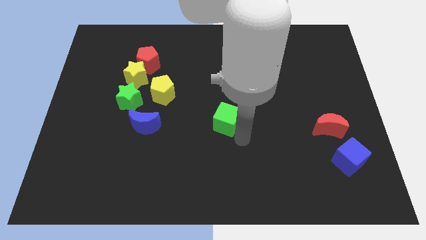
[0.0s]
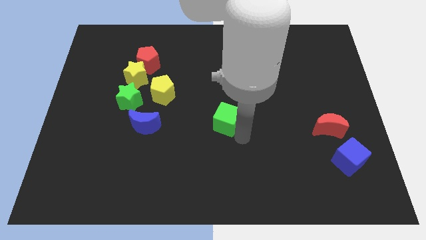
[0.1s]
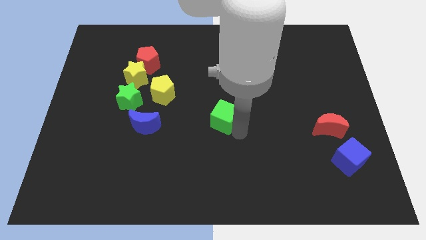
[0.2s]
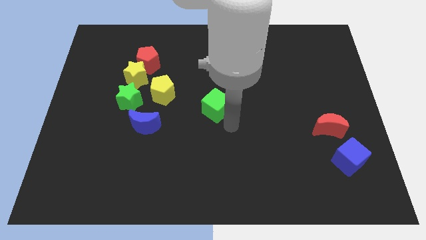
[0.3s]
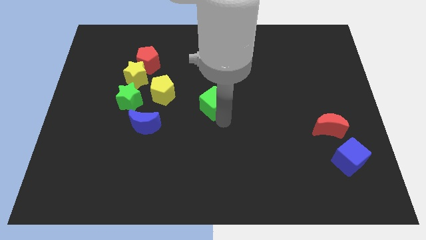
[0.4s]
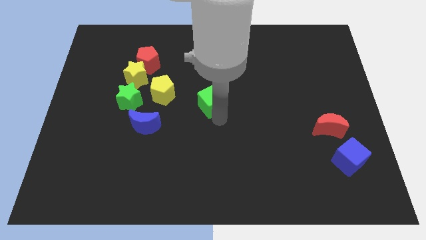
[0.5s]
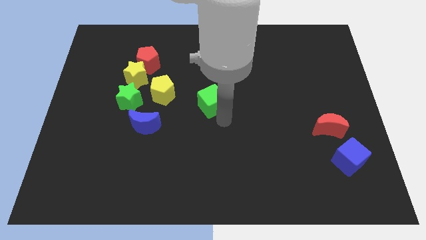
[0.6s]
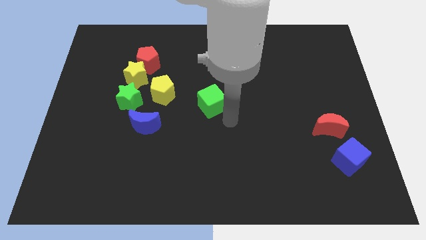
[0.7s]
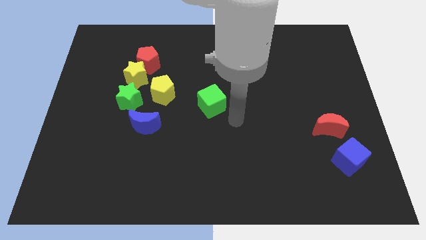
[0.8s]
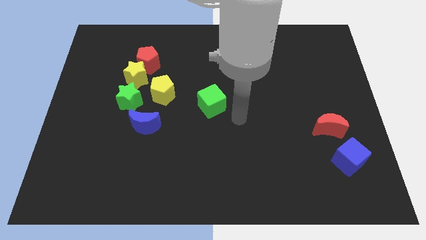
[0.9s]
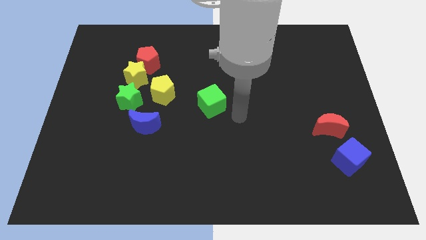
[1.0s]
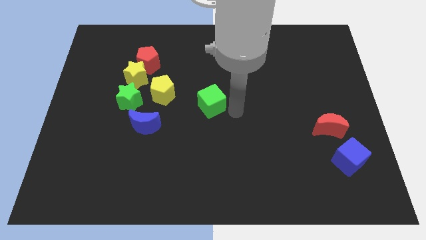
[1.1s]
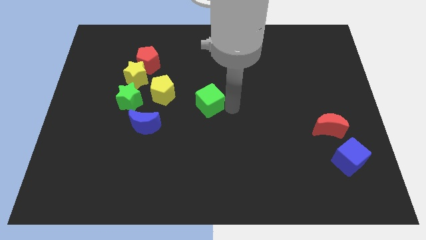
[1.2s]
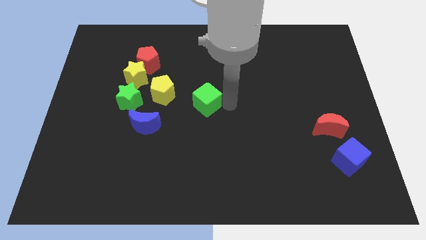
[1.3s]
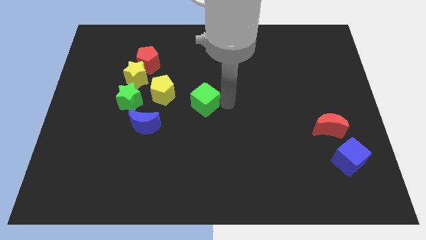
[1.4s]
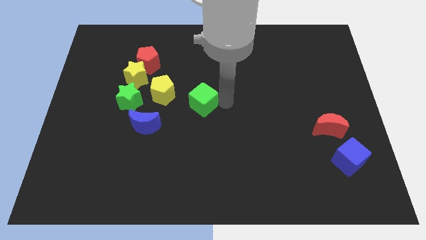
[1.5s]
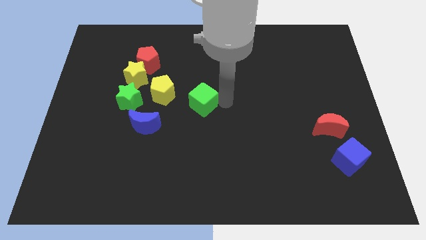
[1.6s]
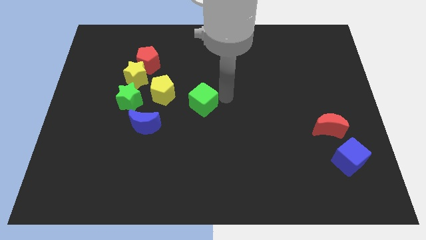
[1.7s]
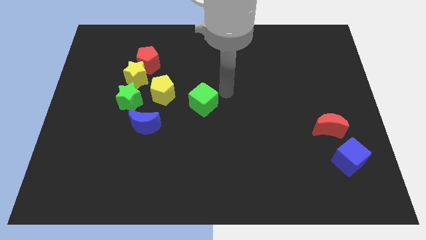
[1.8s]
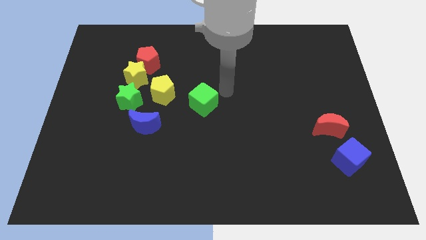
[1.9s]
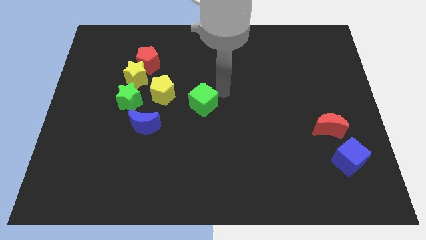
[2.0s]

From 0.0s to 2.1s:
push the green cube to the right side of the yellow pentagon

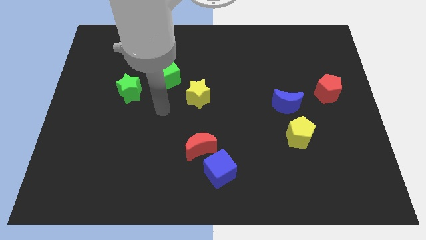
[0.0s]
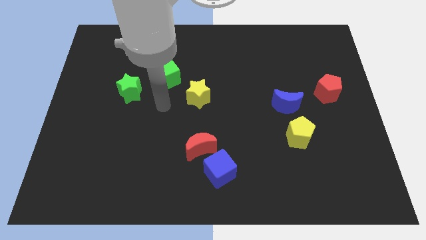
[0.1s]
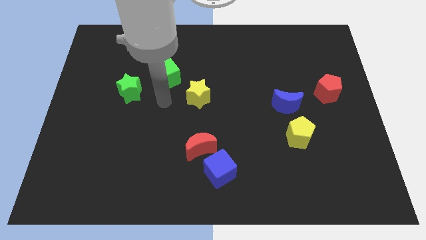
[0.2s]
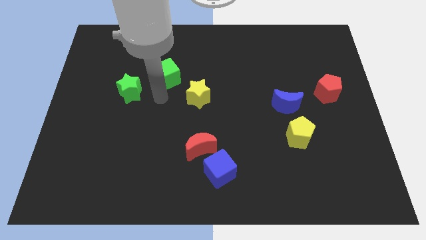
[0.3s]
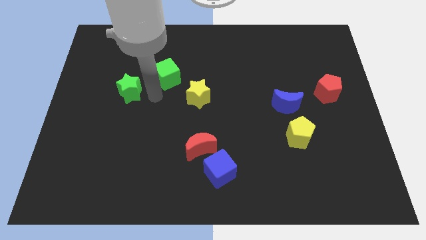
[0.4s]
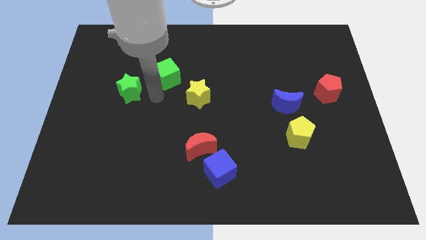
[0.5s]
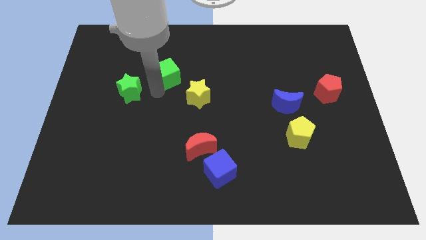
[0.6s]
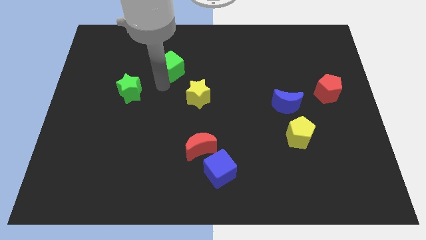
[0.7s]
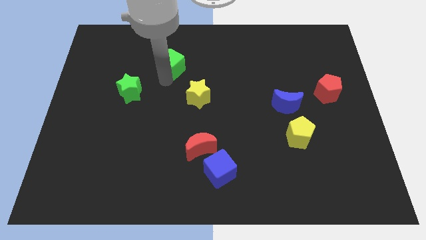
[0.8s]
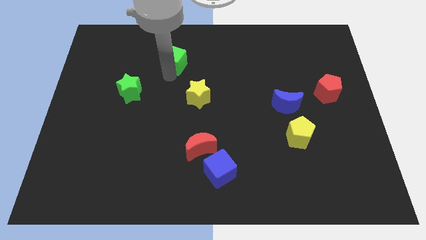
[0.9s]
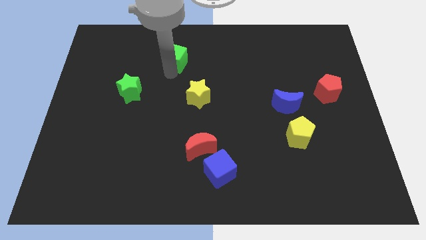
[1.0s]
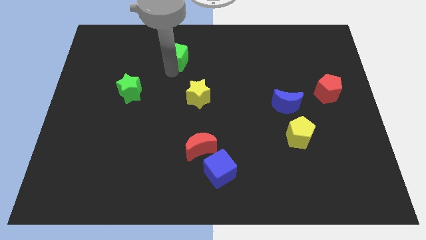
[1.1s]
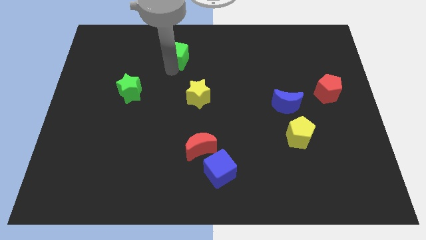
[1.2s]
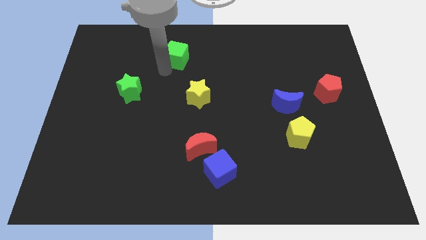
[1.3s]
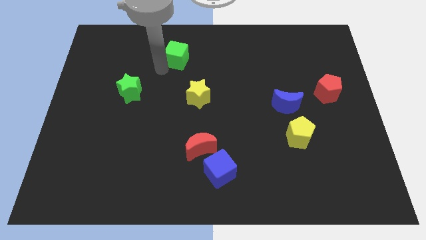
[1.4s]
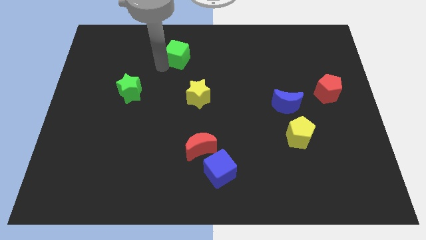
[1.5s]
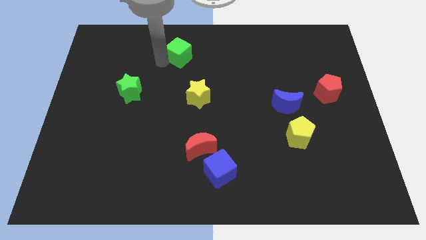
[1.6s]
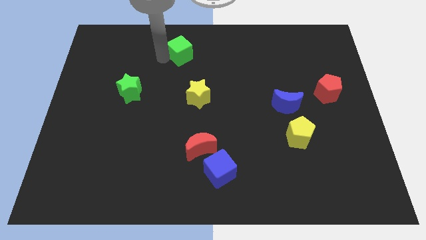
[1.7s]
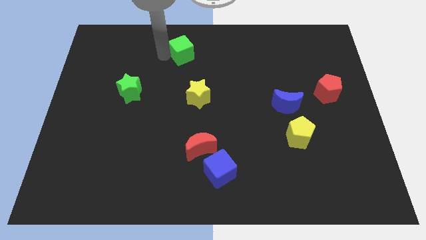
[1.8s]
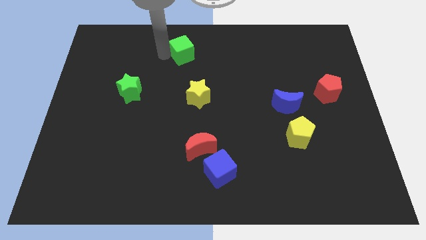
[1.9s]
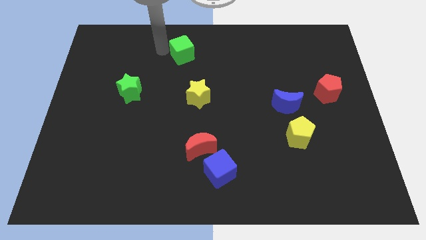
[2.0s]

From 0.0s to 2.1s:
place the green cube above the yellow star

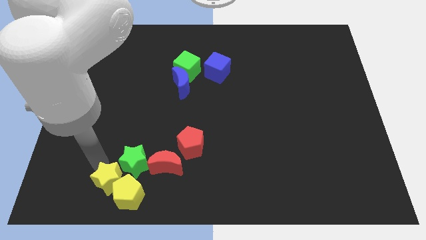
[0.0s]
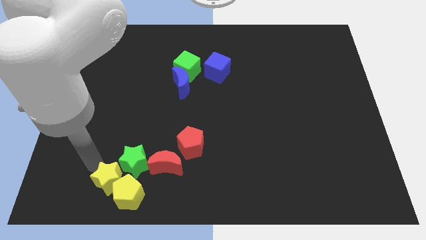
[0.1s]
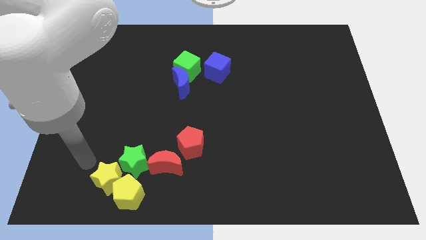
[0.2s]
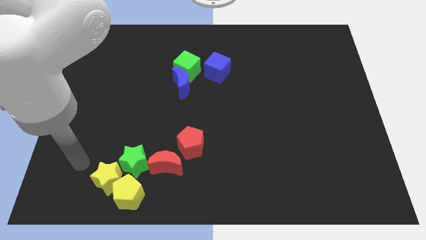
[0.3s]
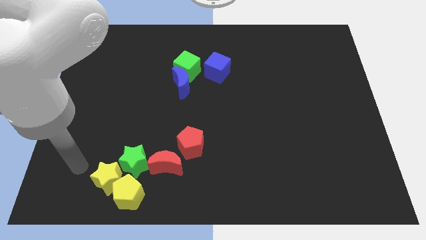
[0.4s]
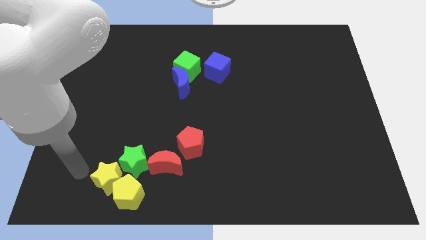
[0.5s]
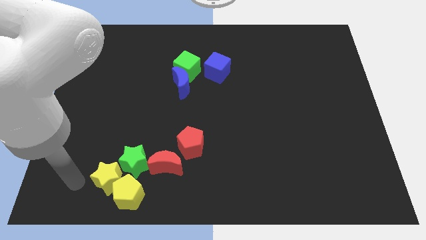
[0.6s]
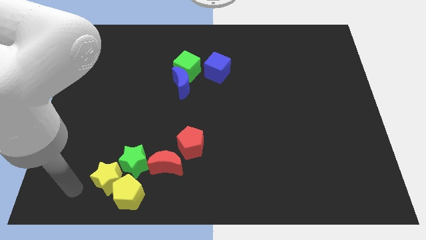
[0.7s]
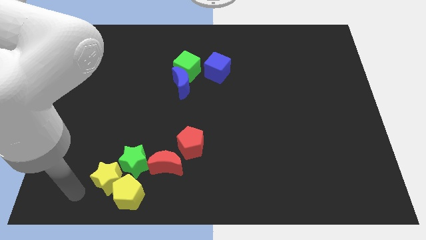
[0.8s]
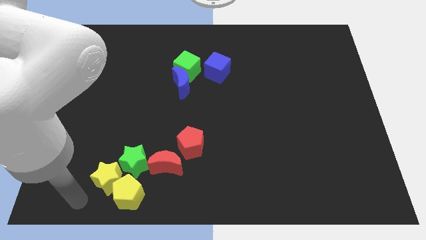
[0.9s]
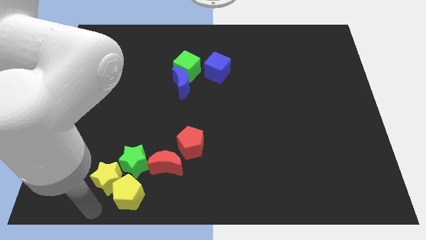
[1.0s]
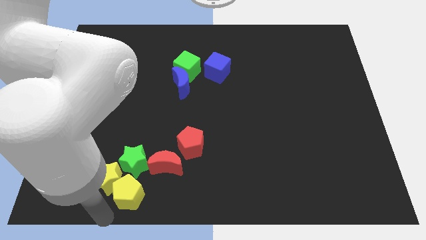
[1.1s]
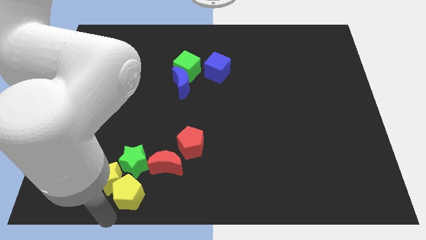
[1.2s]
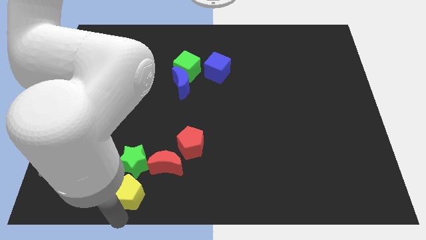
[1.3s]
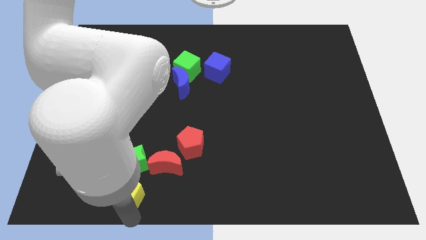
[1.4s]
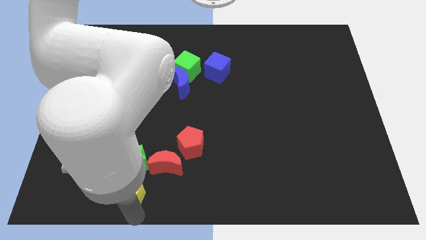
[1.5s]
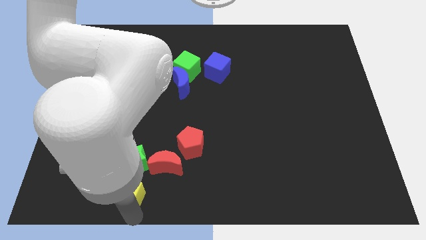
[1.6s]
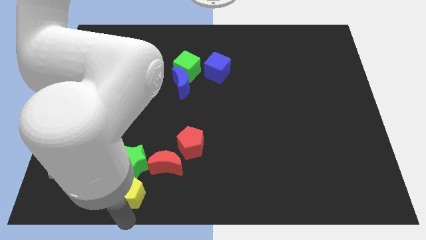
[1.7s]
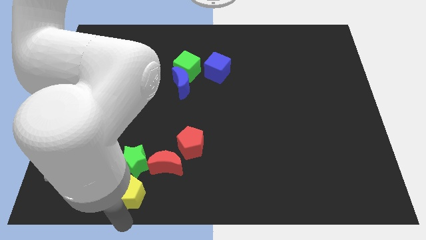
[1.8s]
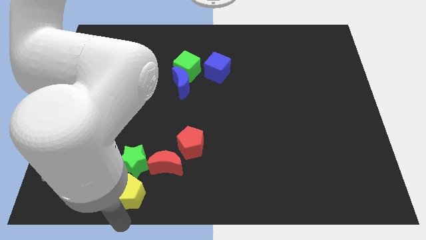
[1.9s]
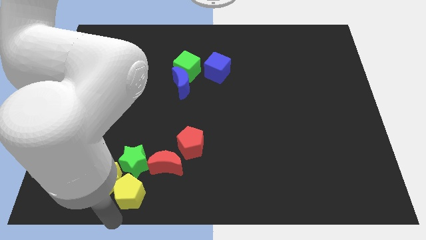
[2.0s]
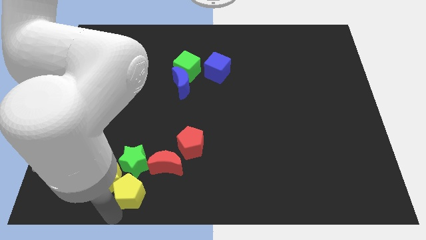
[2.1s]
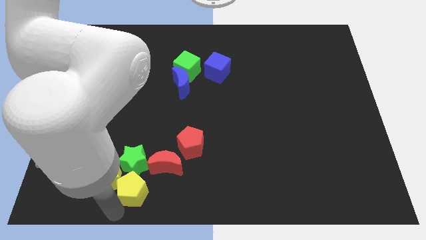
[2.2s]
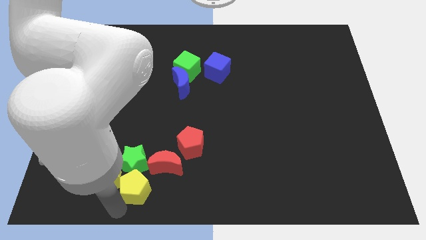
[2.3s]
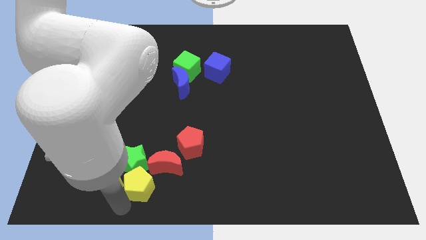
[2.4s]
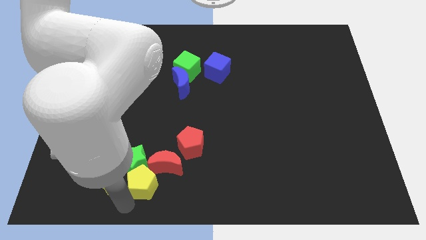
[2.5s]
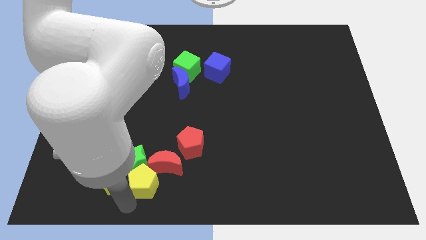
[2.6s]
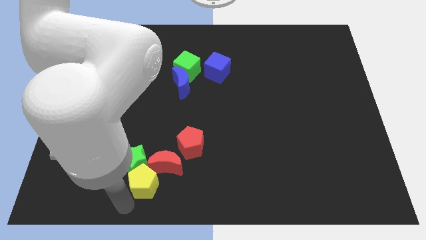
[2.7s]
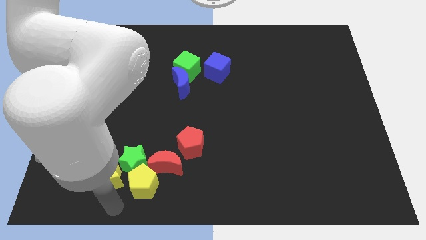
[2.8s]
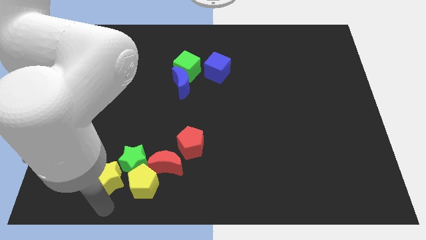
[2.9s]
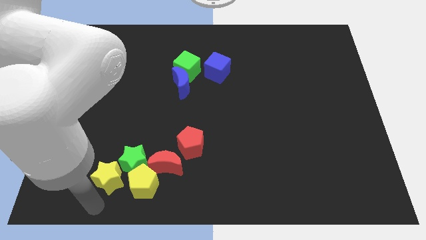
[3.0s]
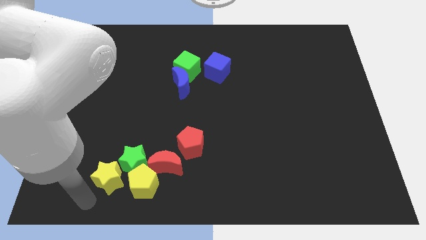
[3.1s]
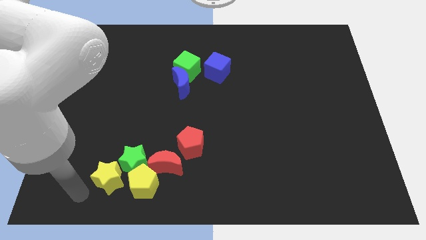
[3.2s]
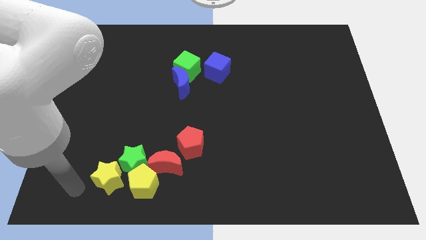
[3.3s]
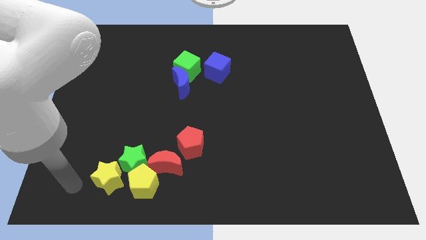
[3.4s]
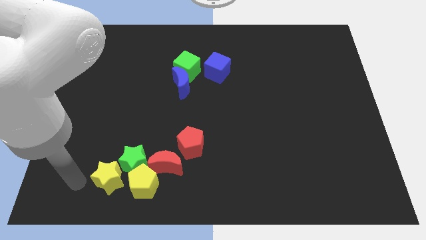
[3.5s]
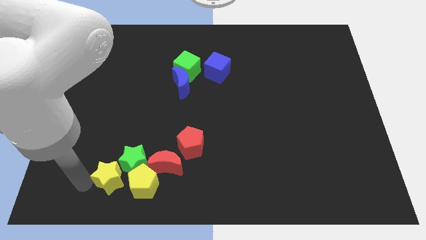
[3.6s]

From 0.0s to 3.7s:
place the yellow pentagon parallel right to the yellow star

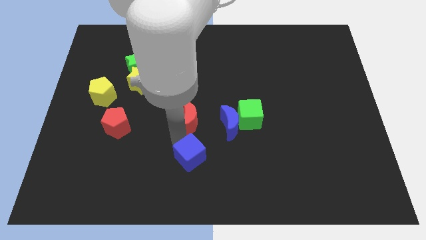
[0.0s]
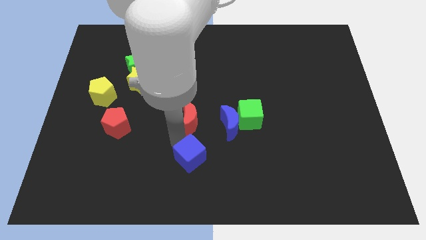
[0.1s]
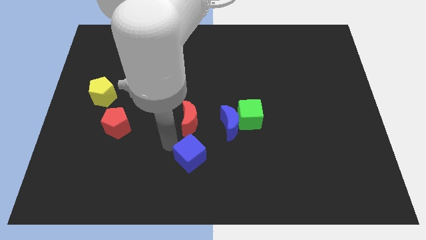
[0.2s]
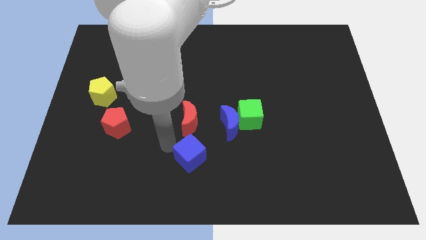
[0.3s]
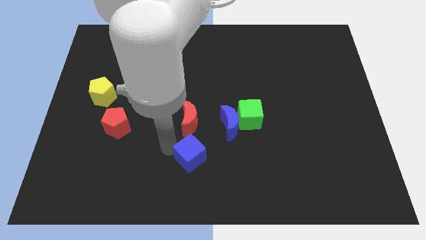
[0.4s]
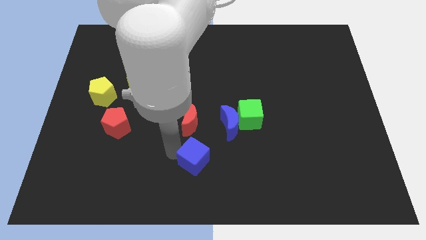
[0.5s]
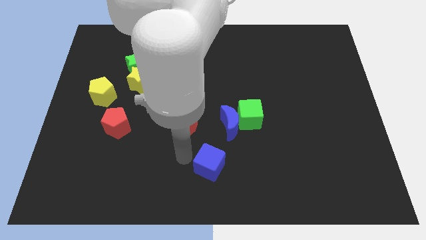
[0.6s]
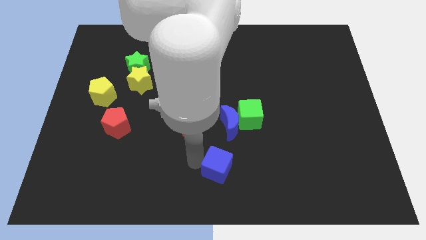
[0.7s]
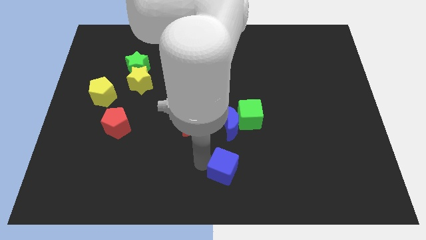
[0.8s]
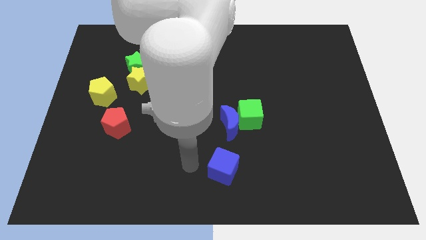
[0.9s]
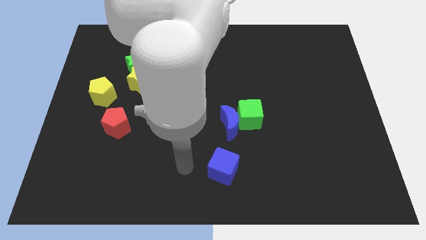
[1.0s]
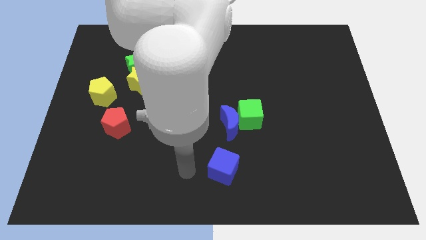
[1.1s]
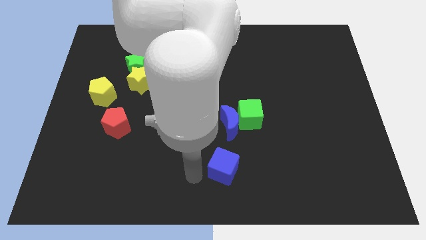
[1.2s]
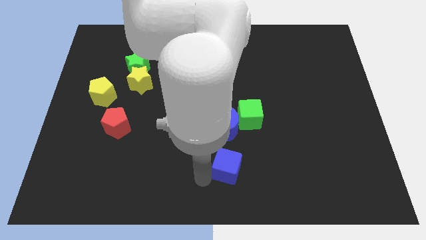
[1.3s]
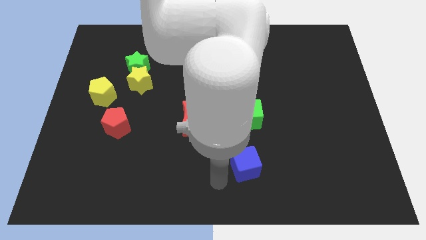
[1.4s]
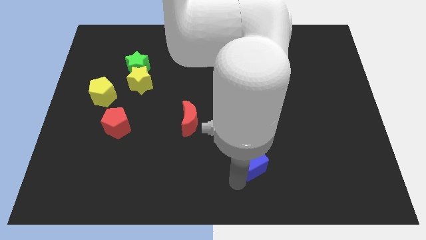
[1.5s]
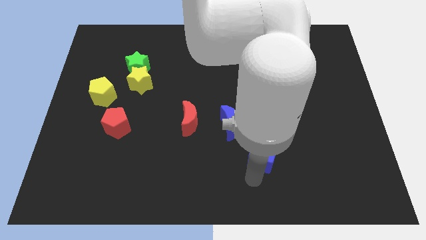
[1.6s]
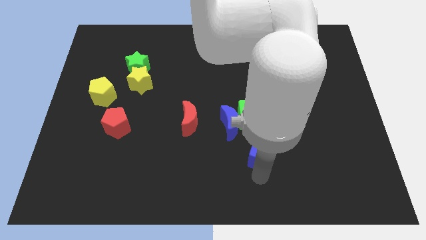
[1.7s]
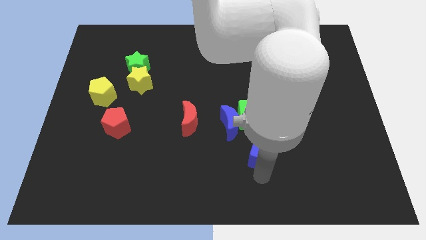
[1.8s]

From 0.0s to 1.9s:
place the blue cube to the bottom of the green cube
